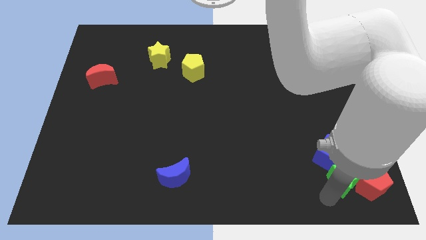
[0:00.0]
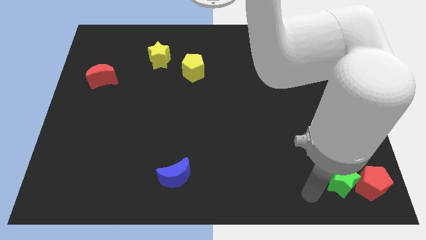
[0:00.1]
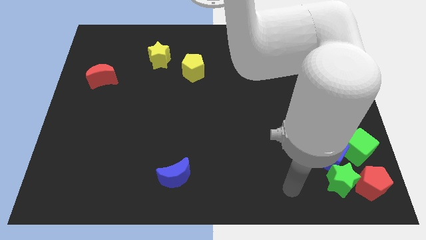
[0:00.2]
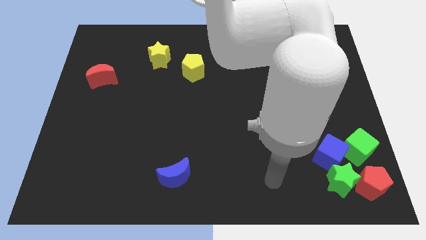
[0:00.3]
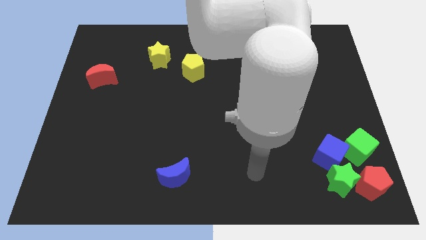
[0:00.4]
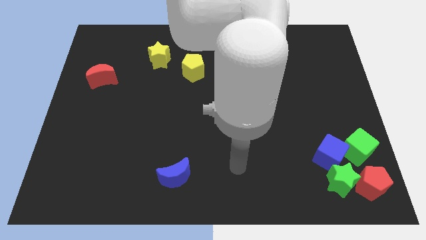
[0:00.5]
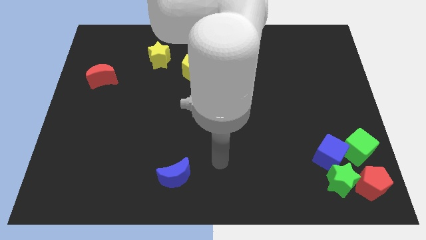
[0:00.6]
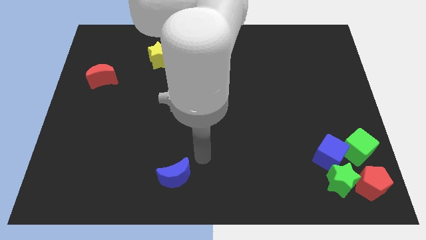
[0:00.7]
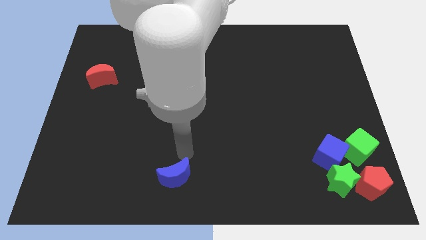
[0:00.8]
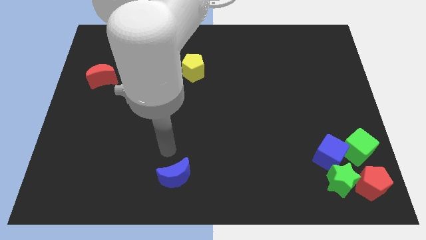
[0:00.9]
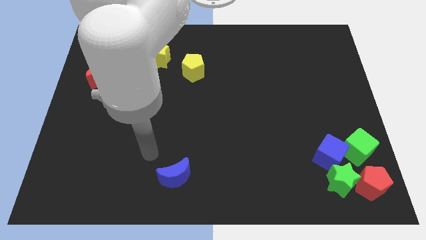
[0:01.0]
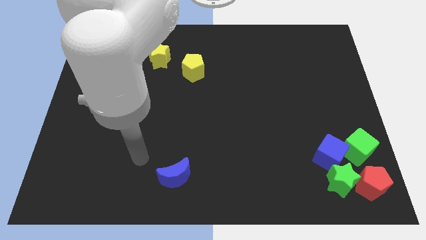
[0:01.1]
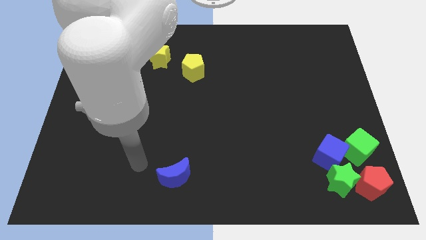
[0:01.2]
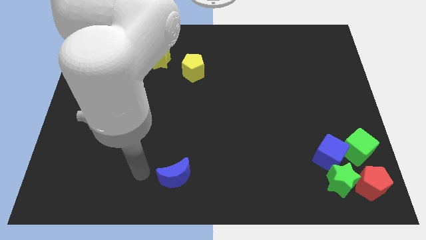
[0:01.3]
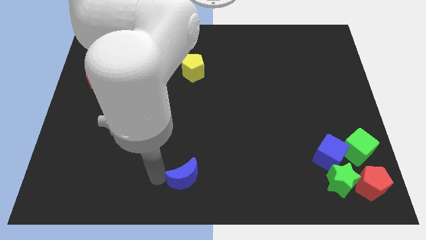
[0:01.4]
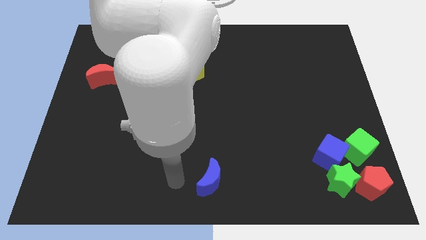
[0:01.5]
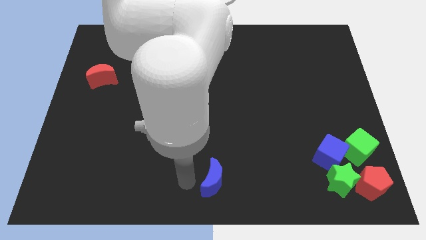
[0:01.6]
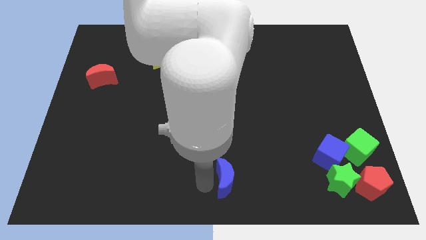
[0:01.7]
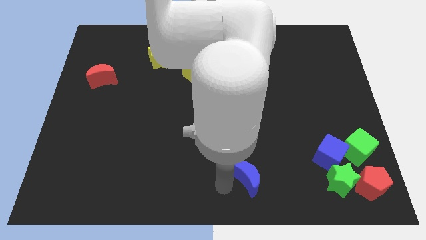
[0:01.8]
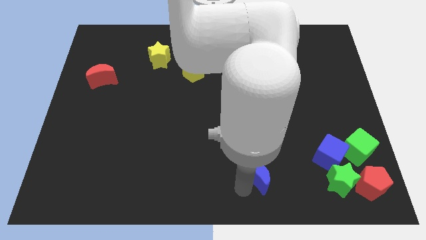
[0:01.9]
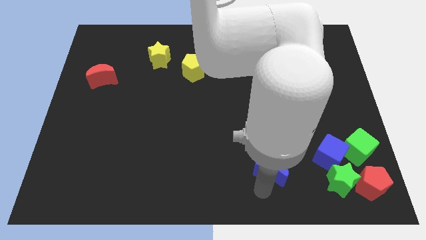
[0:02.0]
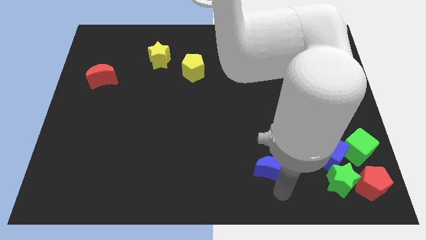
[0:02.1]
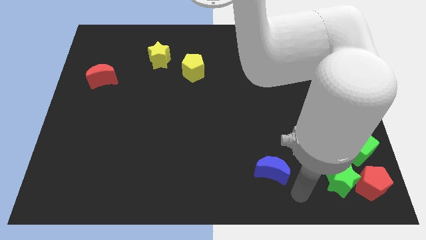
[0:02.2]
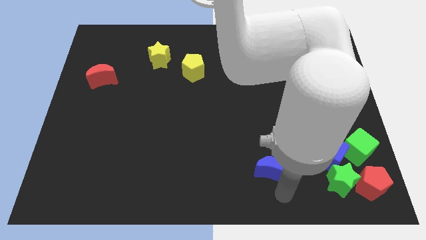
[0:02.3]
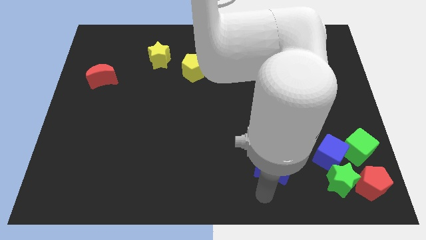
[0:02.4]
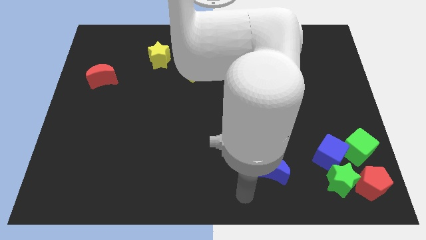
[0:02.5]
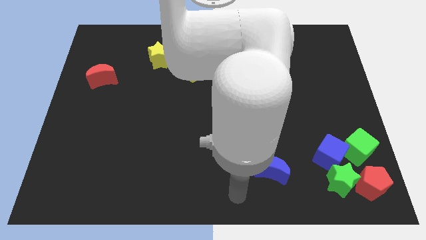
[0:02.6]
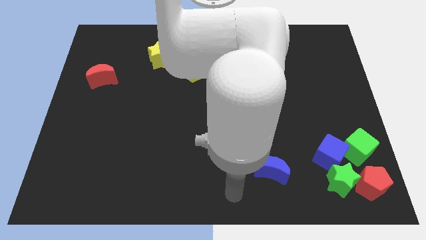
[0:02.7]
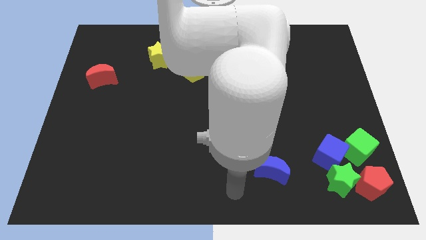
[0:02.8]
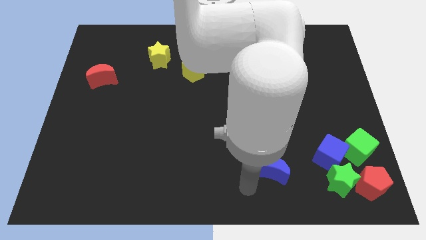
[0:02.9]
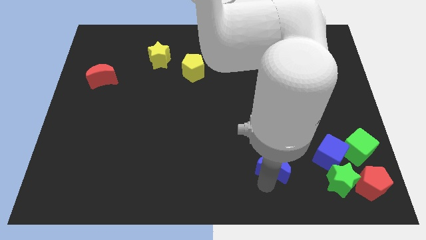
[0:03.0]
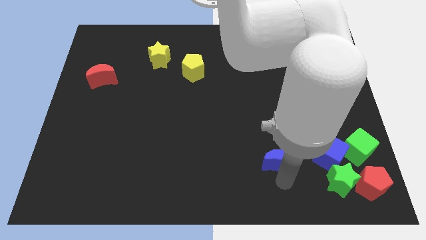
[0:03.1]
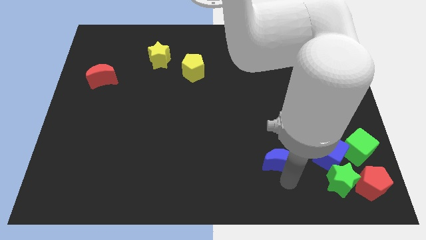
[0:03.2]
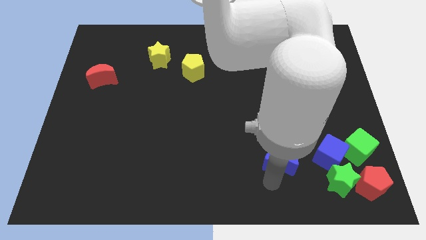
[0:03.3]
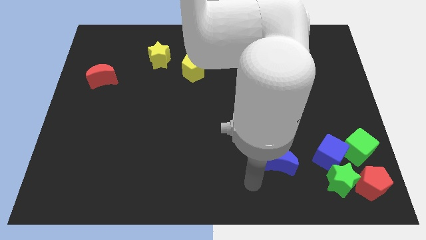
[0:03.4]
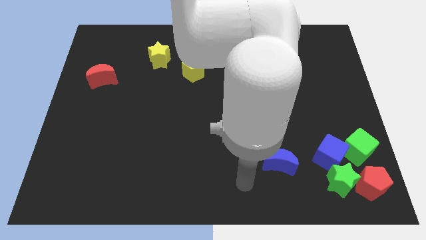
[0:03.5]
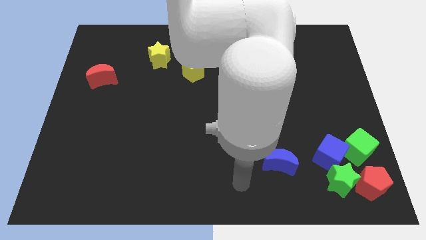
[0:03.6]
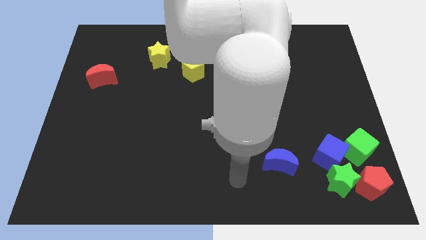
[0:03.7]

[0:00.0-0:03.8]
place the blue moon to the left of blue cube

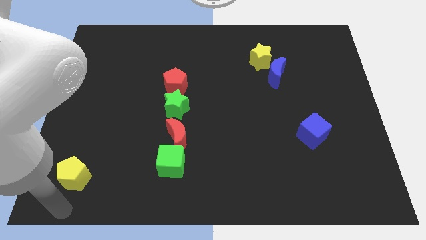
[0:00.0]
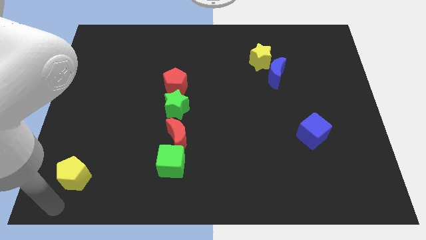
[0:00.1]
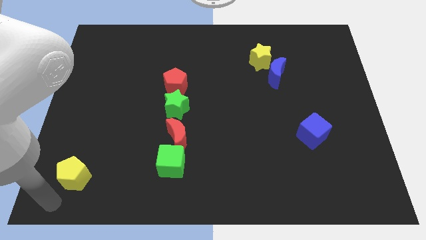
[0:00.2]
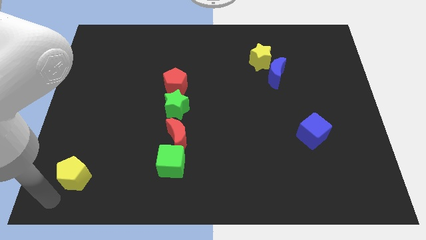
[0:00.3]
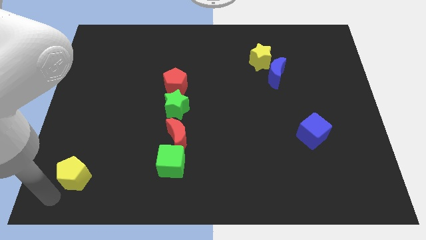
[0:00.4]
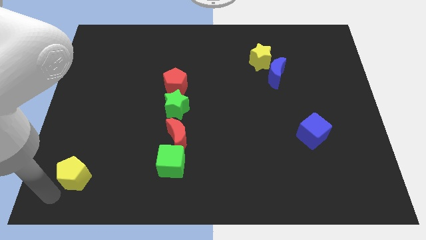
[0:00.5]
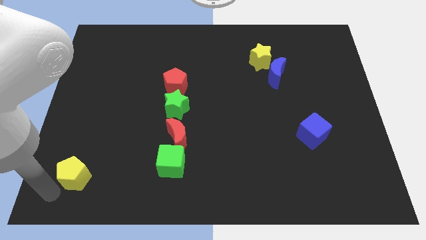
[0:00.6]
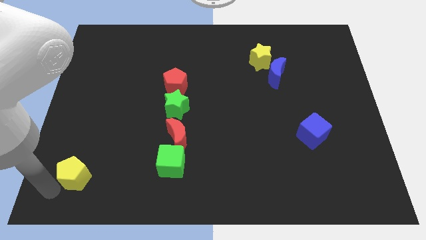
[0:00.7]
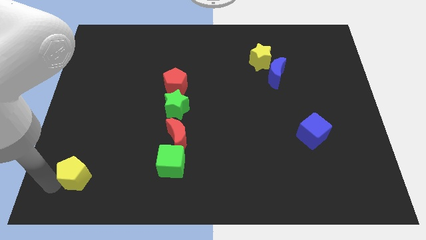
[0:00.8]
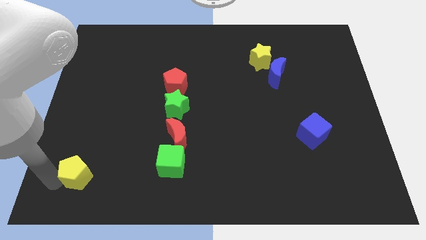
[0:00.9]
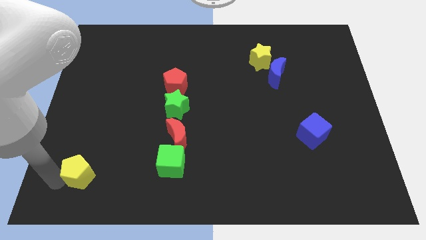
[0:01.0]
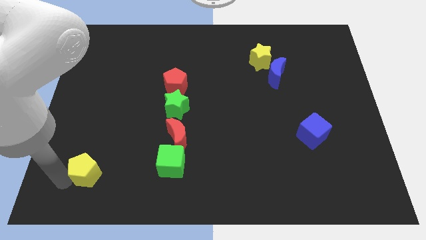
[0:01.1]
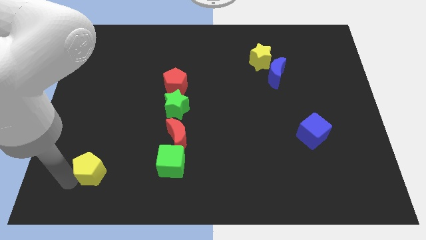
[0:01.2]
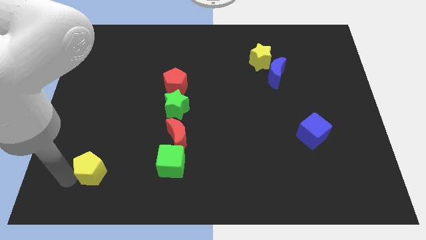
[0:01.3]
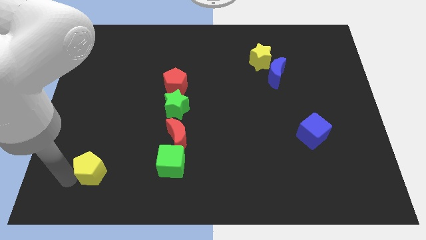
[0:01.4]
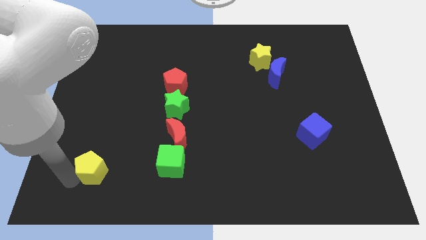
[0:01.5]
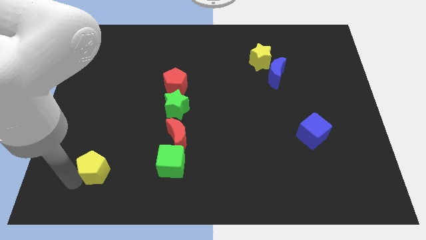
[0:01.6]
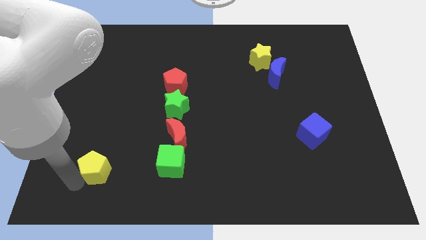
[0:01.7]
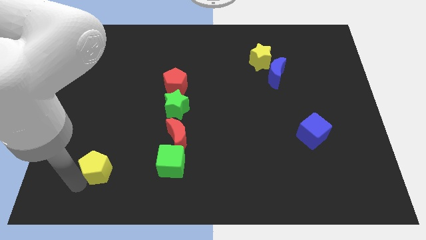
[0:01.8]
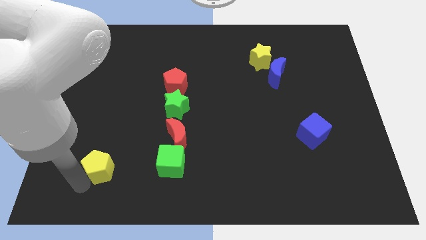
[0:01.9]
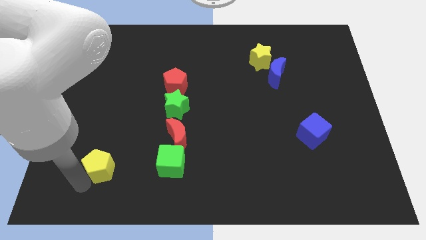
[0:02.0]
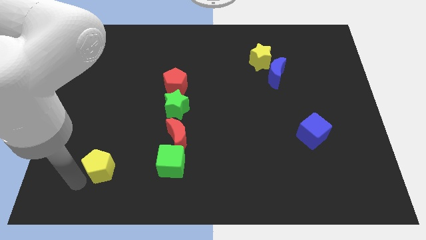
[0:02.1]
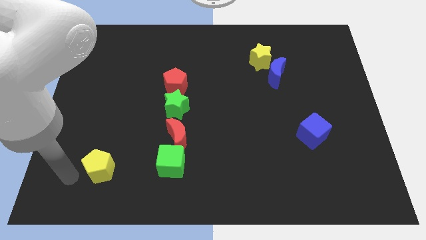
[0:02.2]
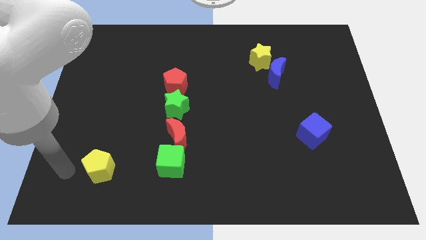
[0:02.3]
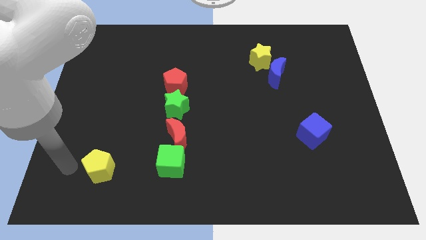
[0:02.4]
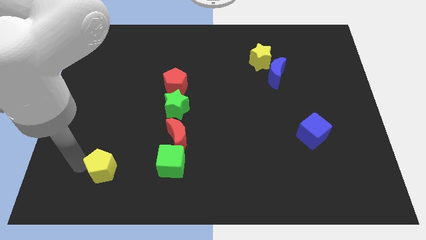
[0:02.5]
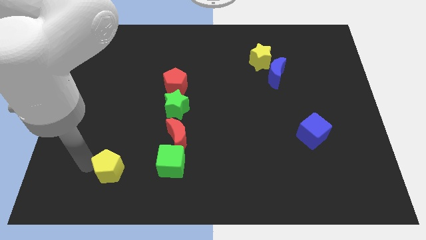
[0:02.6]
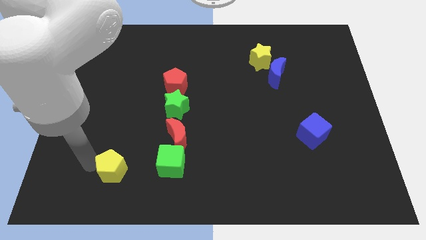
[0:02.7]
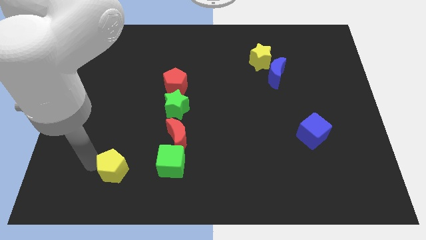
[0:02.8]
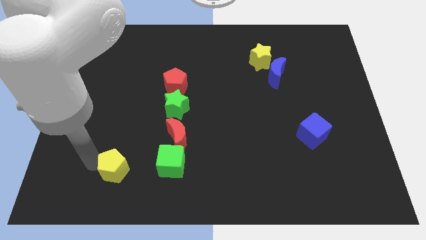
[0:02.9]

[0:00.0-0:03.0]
move the yellow pentagon to the left of green cube

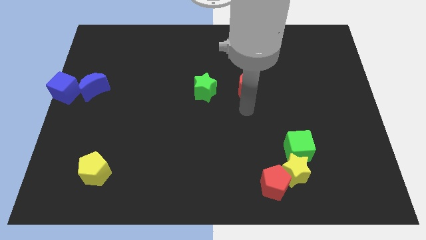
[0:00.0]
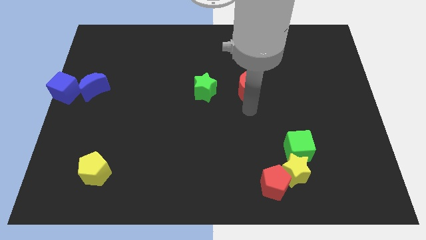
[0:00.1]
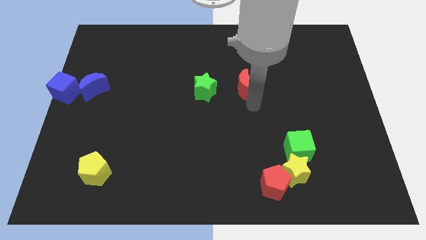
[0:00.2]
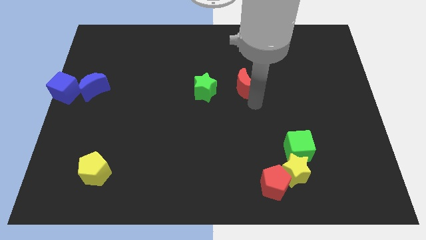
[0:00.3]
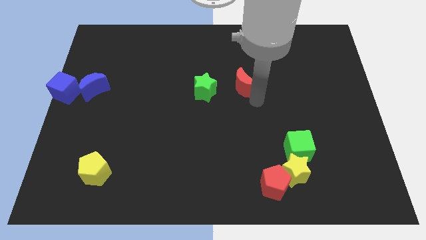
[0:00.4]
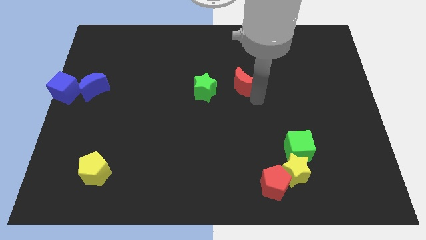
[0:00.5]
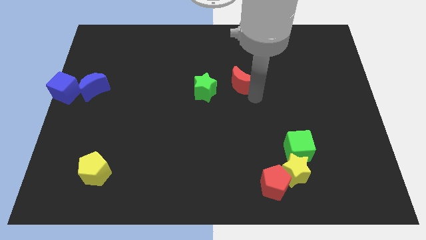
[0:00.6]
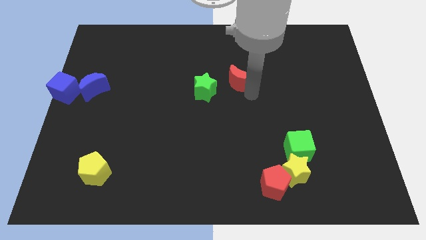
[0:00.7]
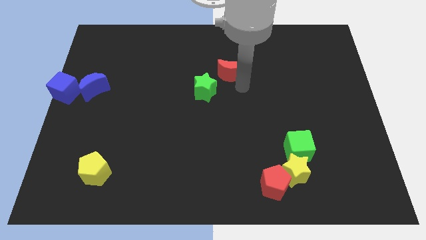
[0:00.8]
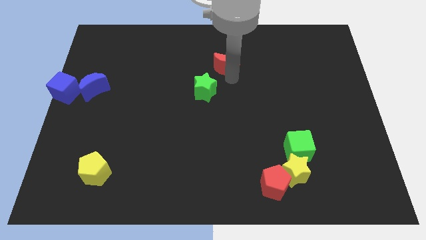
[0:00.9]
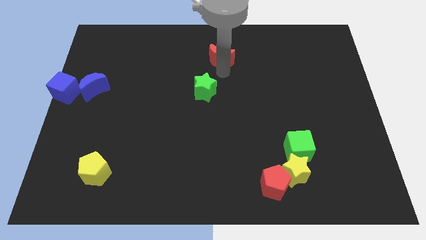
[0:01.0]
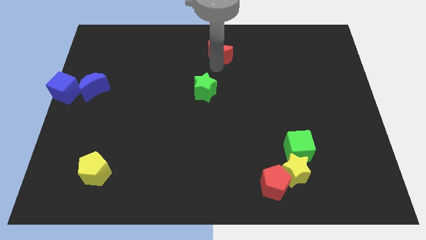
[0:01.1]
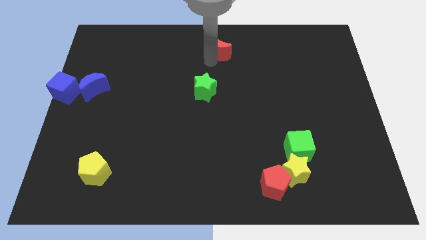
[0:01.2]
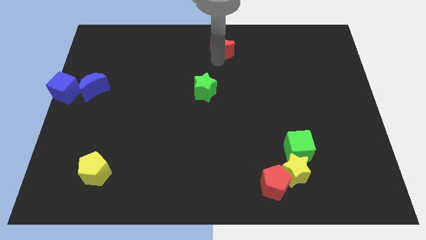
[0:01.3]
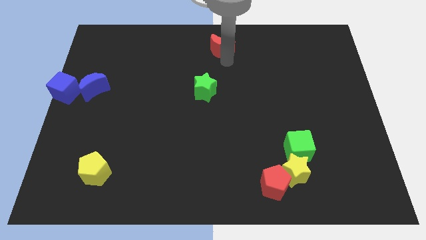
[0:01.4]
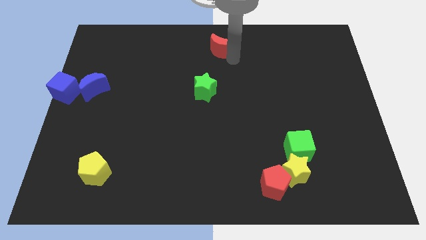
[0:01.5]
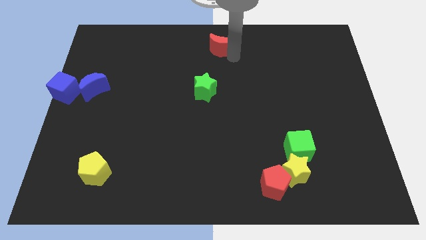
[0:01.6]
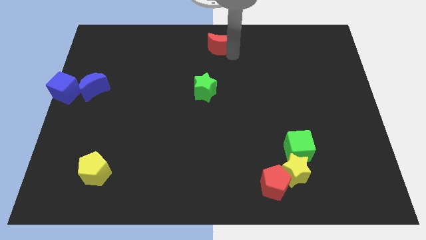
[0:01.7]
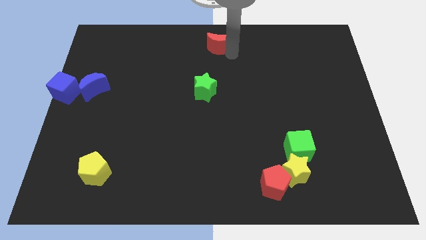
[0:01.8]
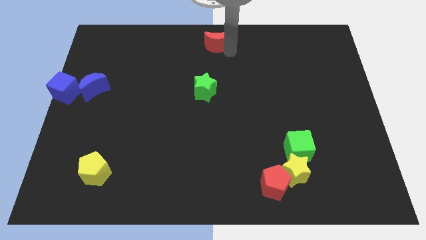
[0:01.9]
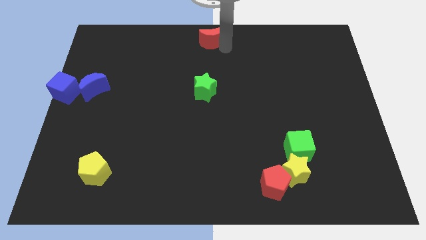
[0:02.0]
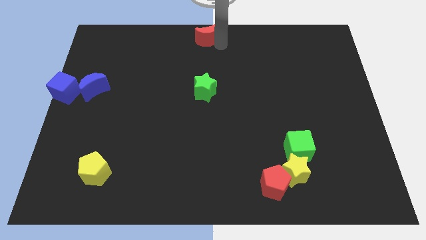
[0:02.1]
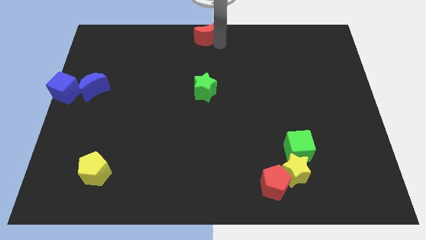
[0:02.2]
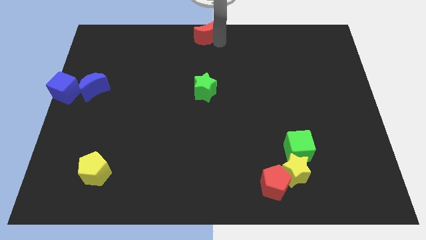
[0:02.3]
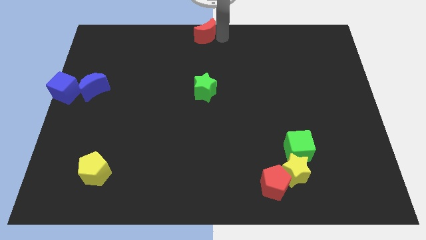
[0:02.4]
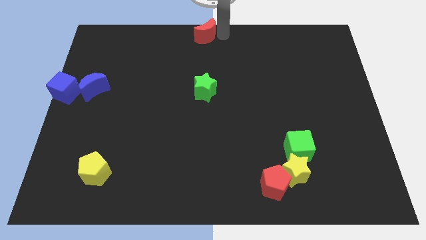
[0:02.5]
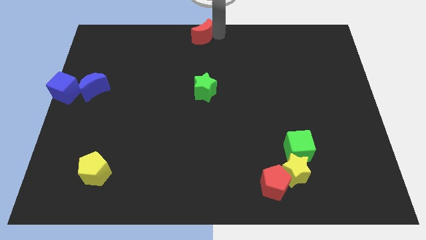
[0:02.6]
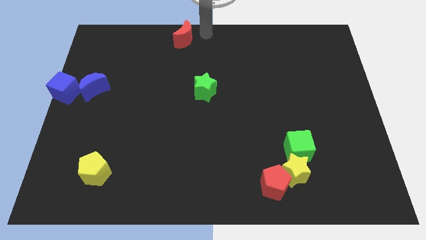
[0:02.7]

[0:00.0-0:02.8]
move the red moon above the green star
